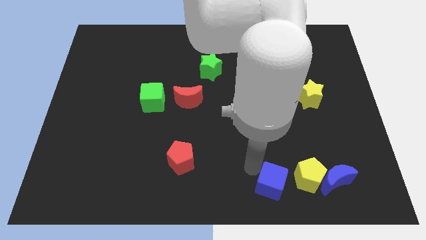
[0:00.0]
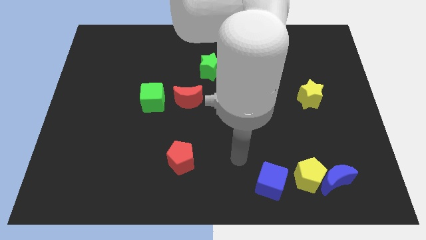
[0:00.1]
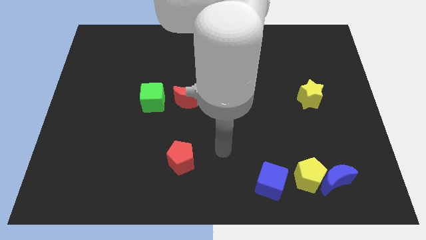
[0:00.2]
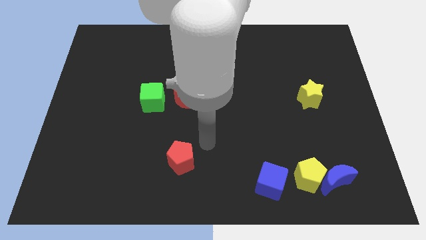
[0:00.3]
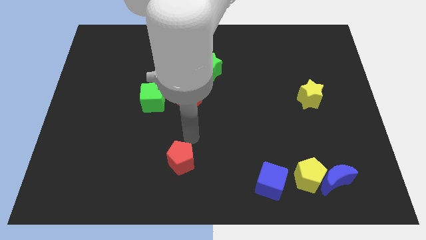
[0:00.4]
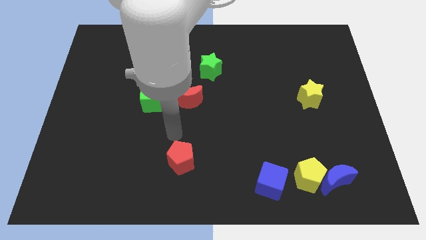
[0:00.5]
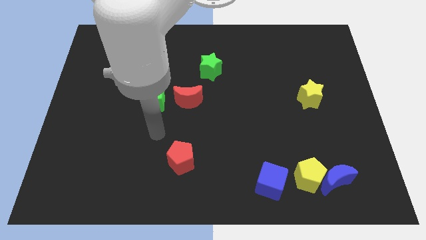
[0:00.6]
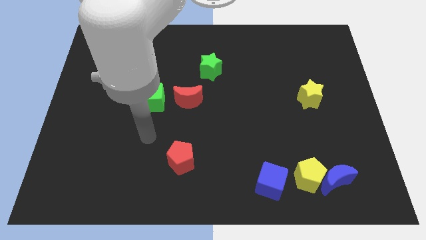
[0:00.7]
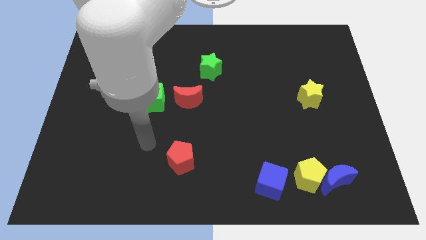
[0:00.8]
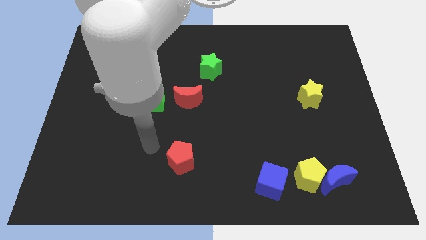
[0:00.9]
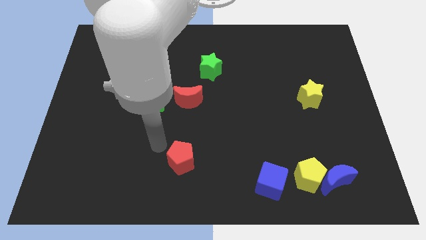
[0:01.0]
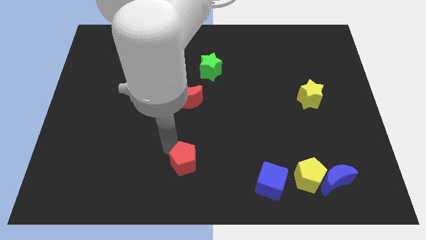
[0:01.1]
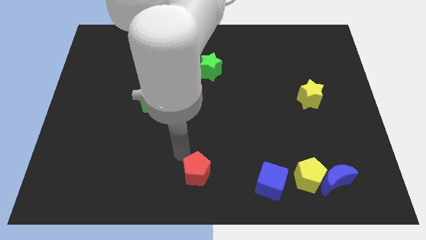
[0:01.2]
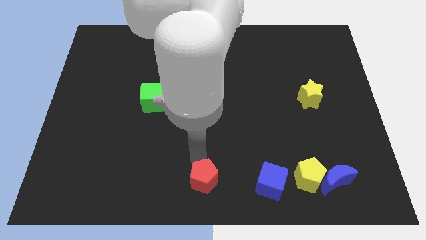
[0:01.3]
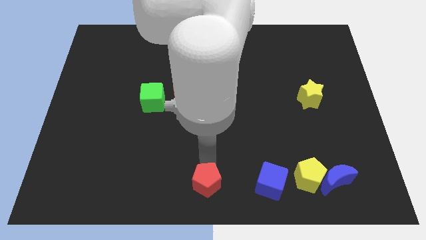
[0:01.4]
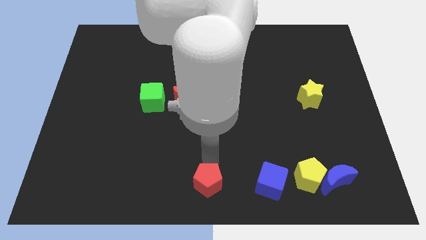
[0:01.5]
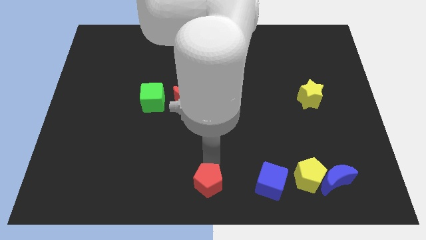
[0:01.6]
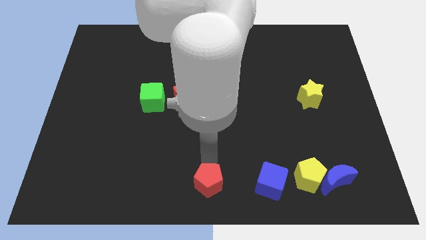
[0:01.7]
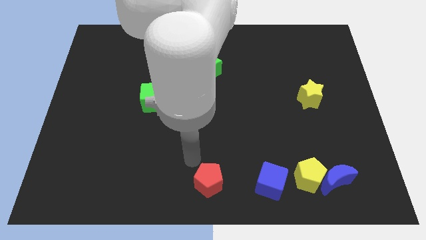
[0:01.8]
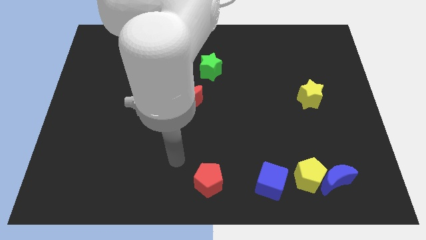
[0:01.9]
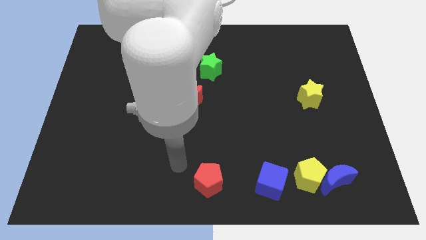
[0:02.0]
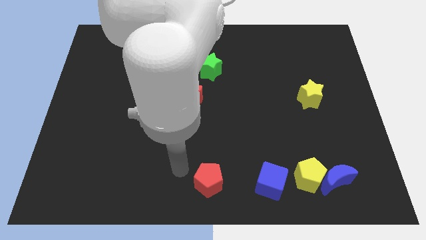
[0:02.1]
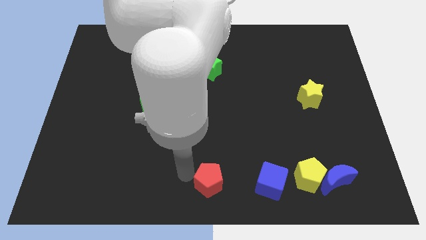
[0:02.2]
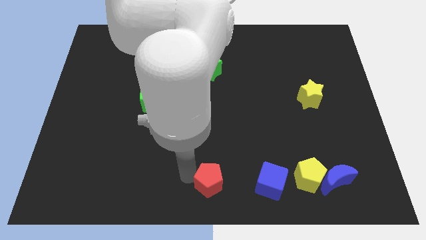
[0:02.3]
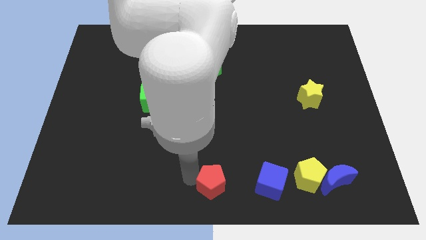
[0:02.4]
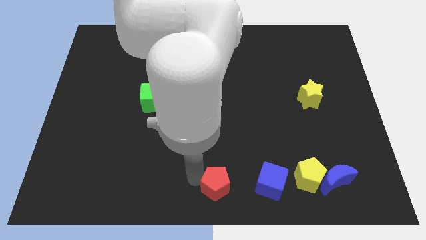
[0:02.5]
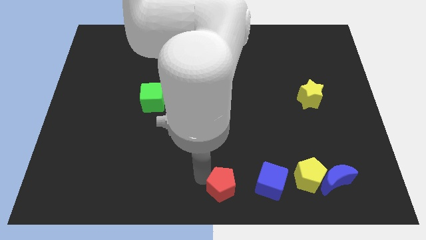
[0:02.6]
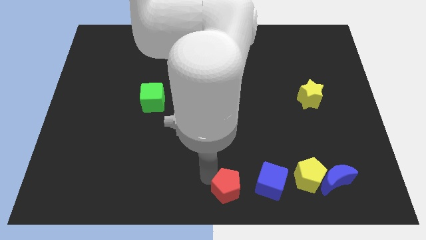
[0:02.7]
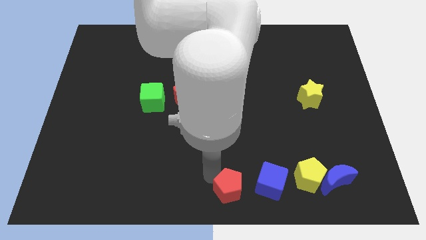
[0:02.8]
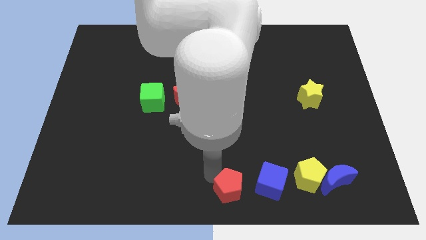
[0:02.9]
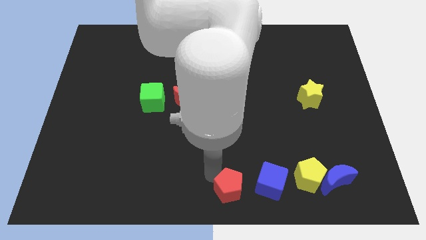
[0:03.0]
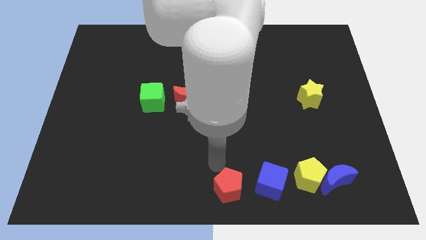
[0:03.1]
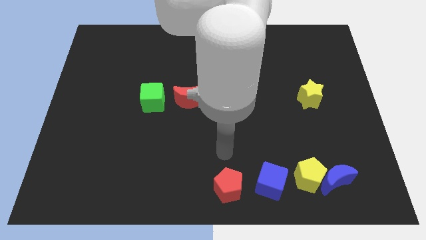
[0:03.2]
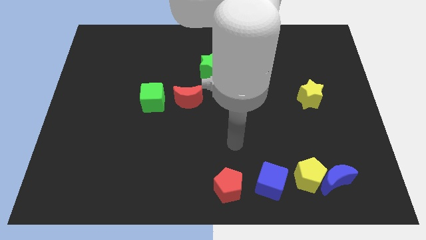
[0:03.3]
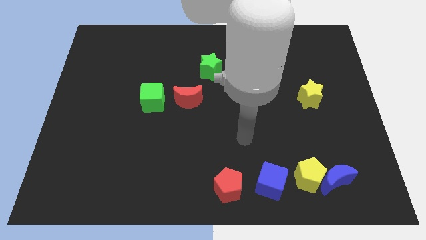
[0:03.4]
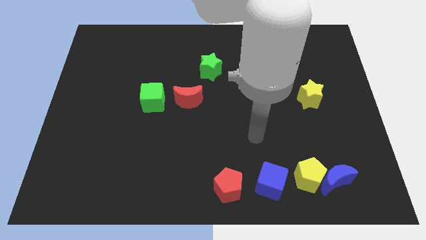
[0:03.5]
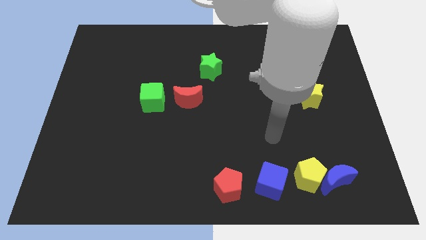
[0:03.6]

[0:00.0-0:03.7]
move the red pentagon to the left of blue cube

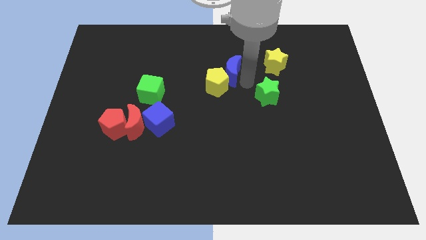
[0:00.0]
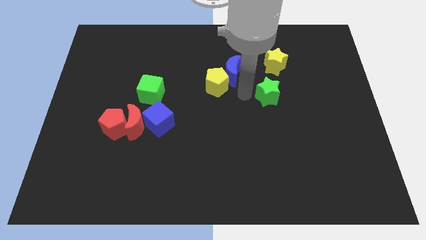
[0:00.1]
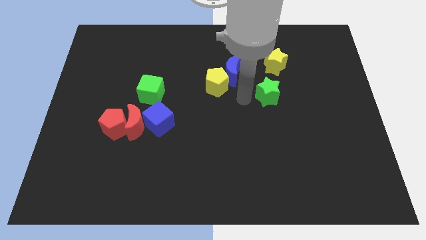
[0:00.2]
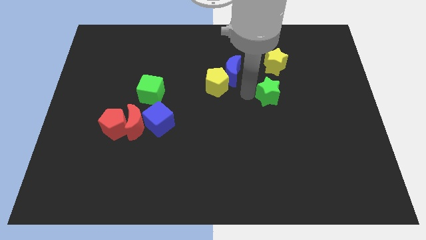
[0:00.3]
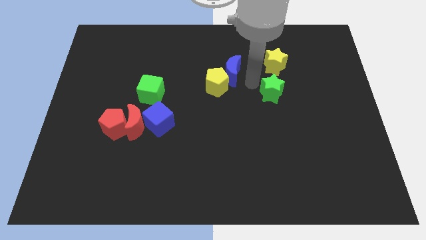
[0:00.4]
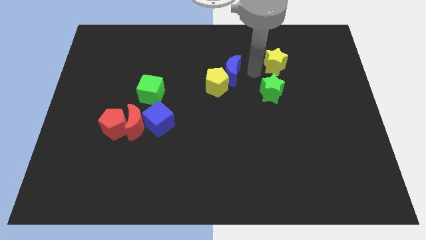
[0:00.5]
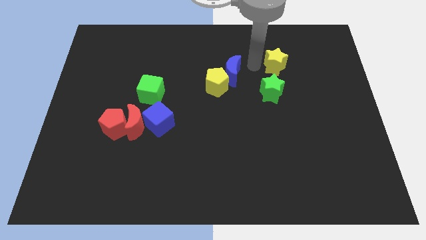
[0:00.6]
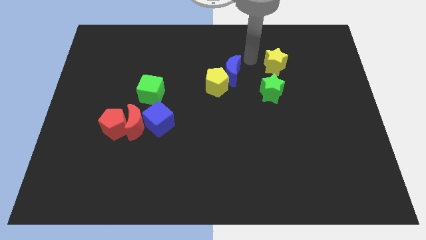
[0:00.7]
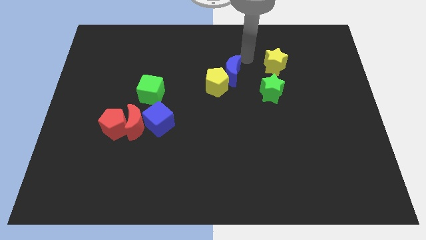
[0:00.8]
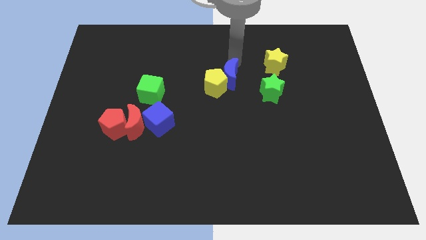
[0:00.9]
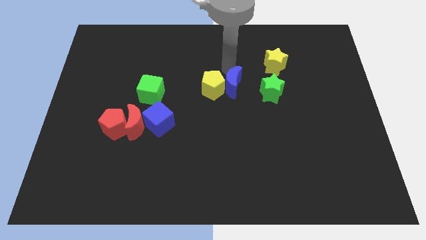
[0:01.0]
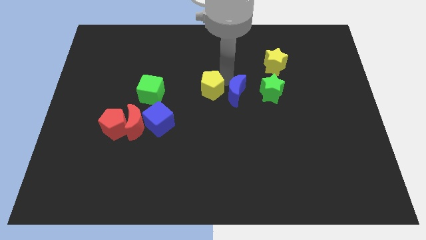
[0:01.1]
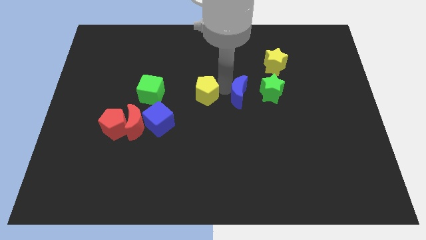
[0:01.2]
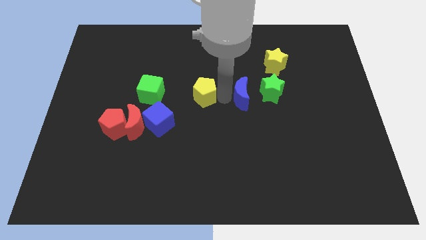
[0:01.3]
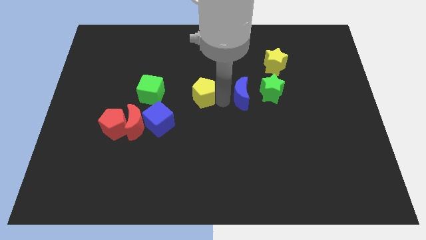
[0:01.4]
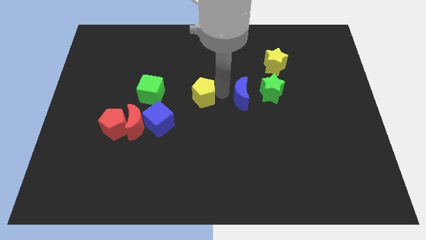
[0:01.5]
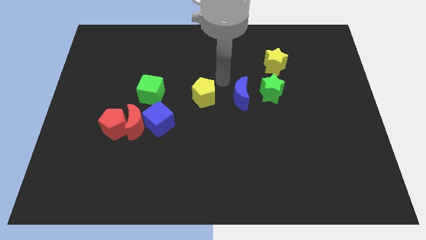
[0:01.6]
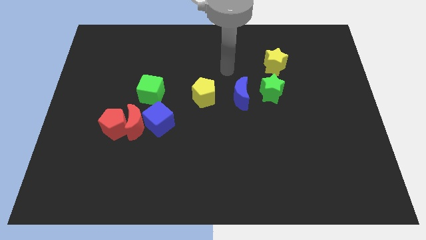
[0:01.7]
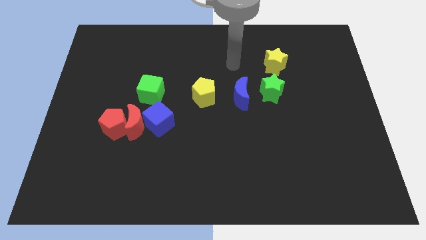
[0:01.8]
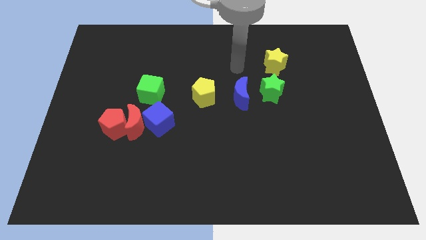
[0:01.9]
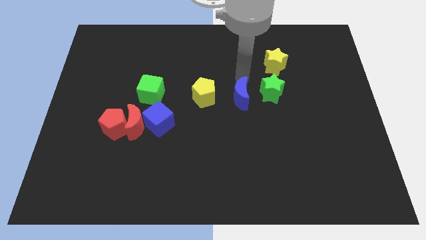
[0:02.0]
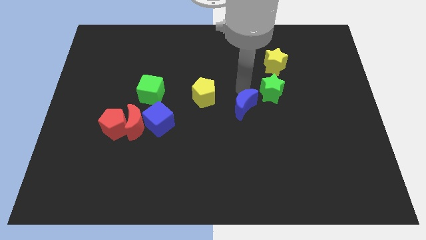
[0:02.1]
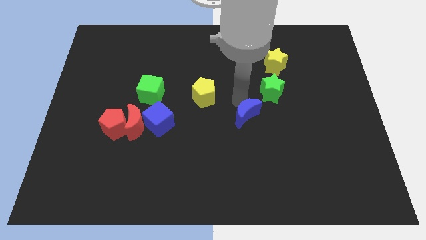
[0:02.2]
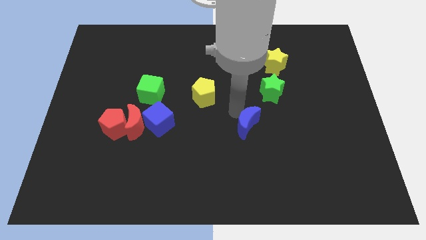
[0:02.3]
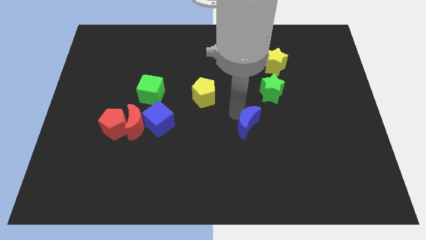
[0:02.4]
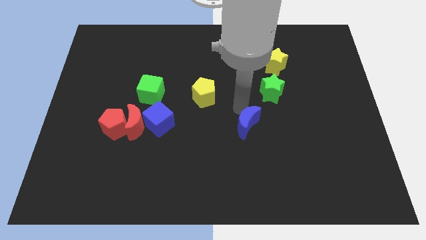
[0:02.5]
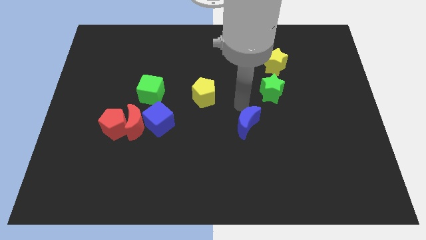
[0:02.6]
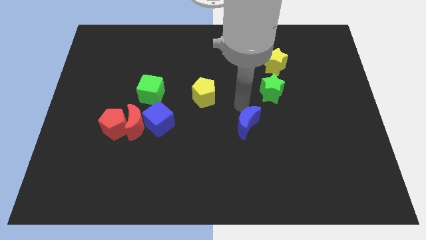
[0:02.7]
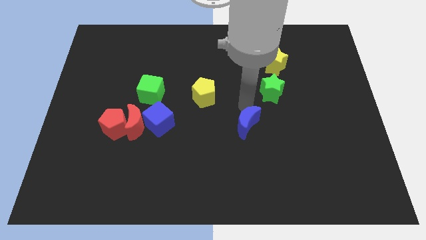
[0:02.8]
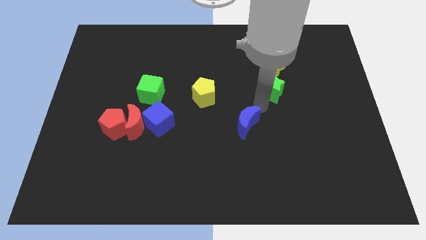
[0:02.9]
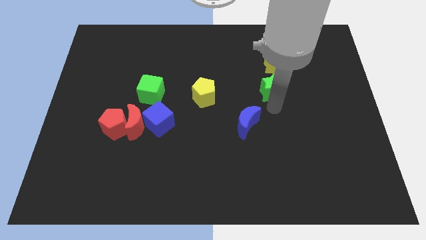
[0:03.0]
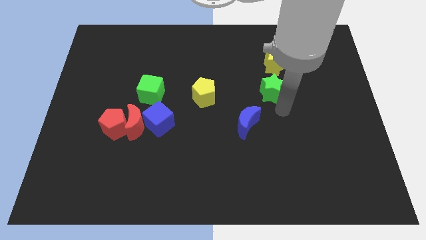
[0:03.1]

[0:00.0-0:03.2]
move the blue crescent to the bottom left of the green star

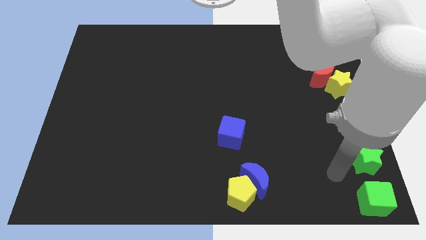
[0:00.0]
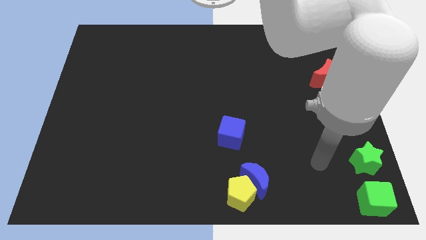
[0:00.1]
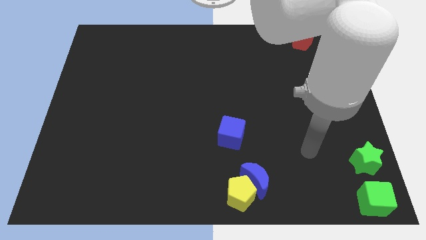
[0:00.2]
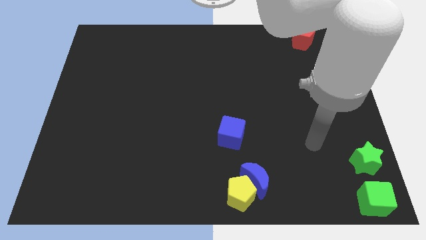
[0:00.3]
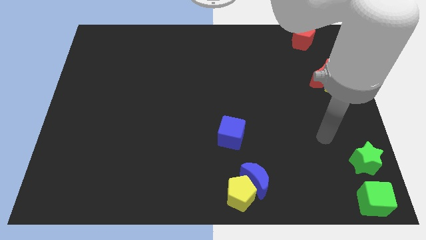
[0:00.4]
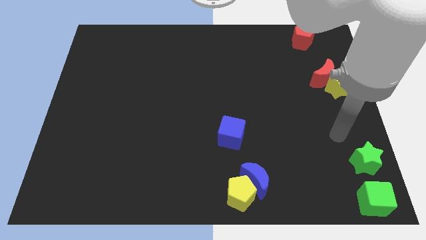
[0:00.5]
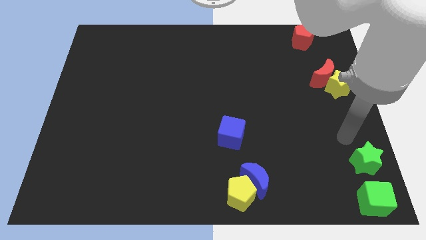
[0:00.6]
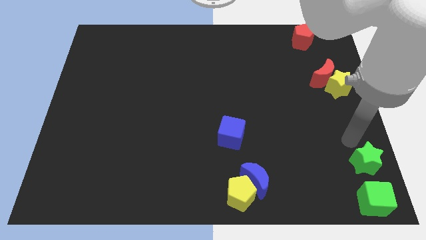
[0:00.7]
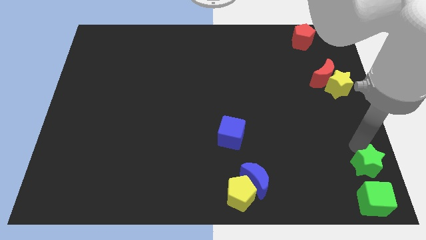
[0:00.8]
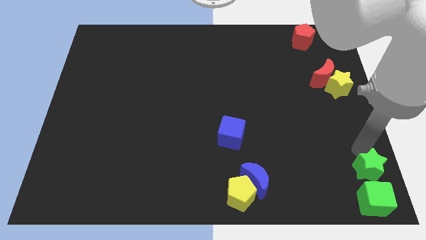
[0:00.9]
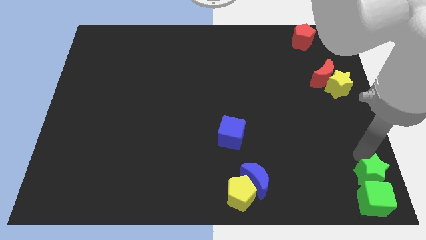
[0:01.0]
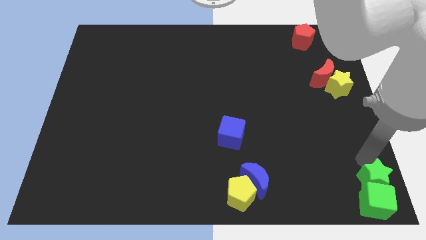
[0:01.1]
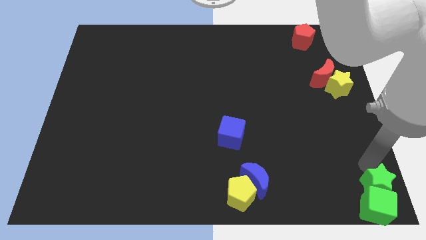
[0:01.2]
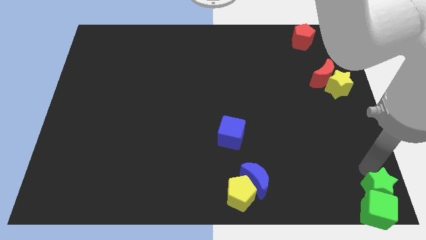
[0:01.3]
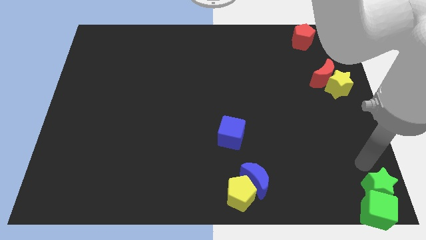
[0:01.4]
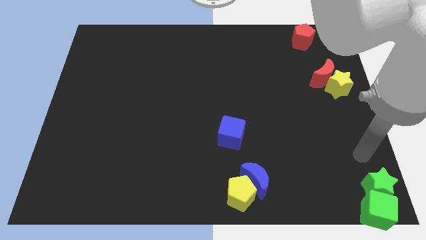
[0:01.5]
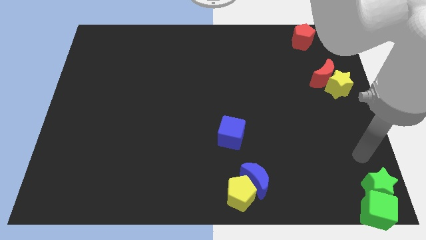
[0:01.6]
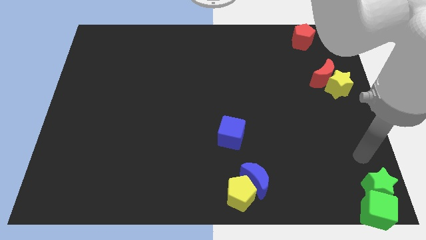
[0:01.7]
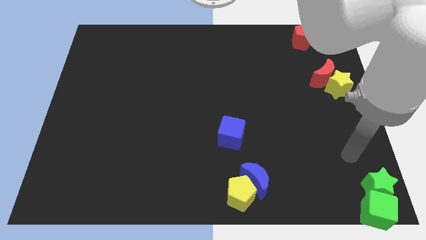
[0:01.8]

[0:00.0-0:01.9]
push the green star into the green cube

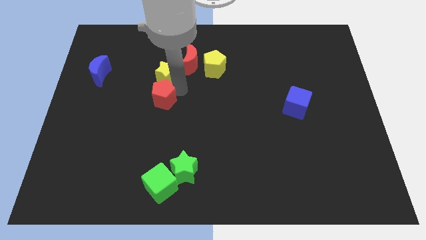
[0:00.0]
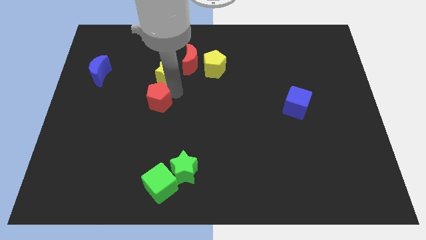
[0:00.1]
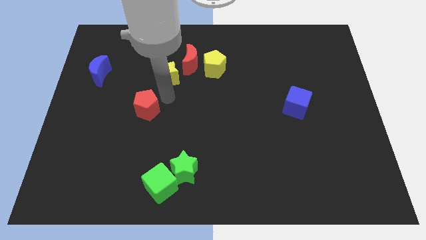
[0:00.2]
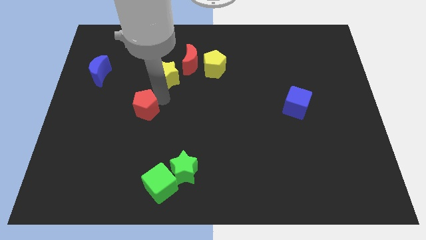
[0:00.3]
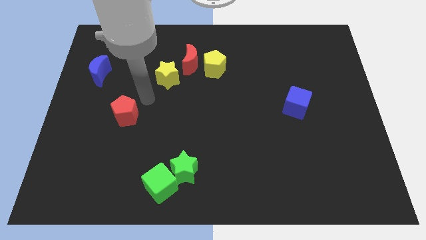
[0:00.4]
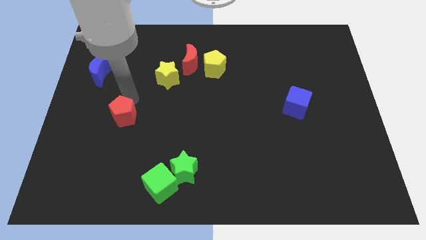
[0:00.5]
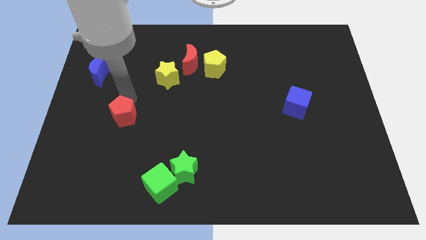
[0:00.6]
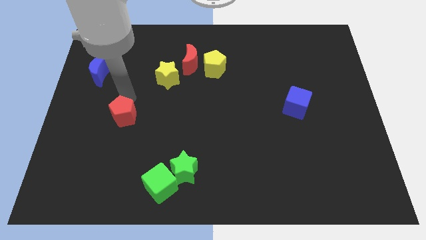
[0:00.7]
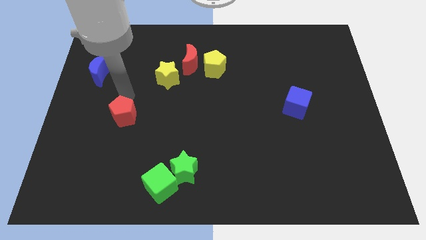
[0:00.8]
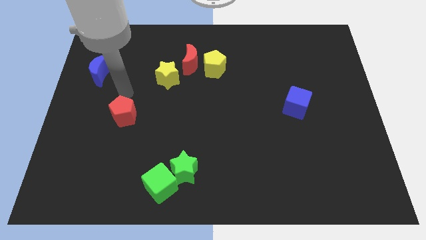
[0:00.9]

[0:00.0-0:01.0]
place the red pentagon above the green cube
